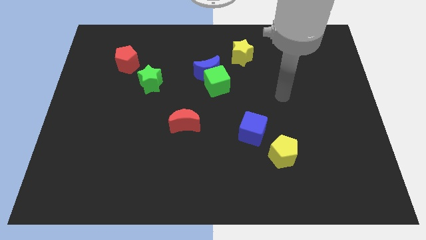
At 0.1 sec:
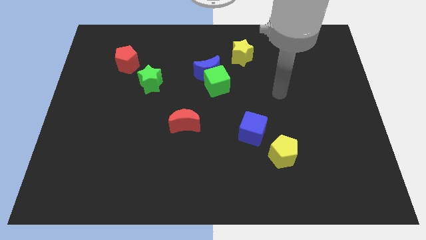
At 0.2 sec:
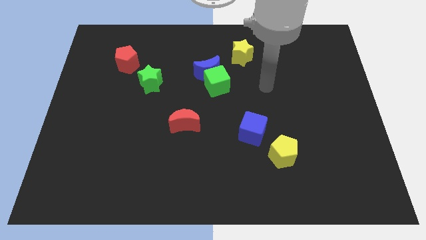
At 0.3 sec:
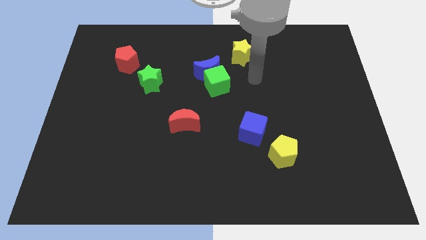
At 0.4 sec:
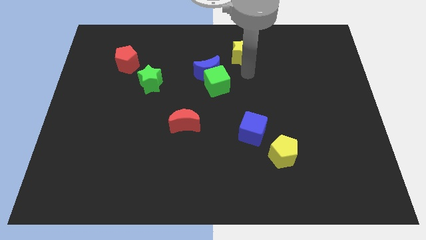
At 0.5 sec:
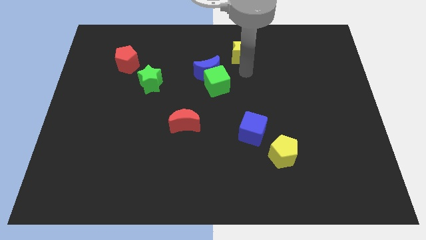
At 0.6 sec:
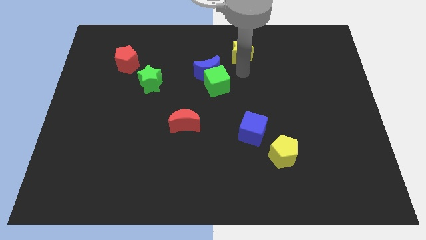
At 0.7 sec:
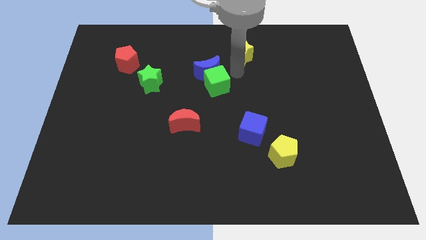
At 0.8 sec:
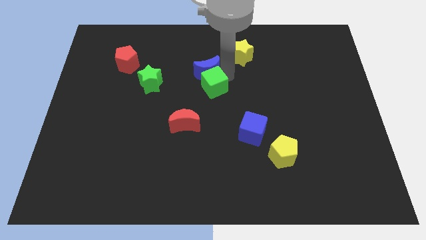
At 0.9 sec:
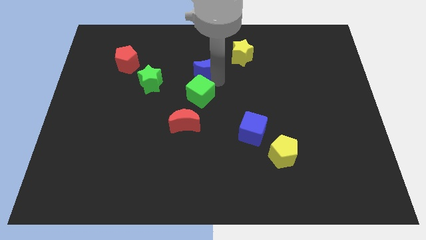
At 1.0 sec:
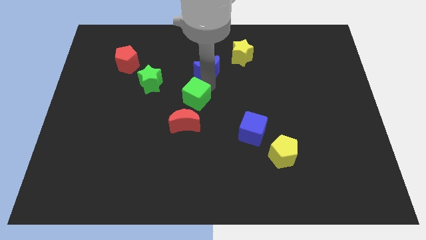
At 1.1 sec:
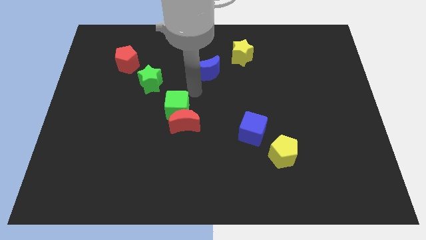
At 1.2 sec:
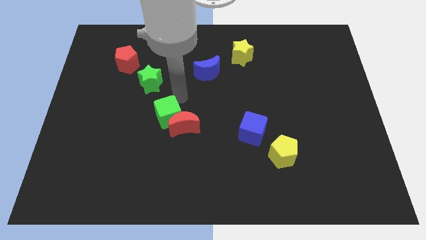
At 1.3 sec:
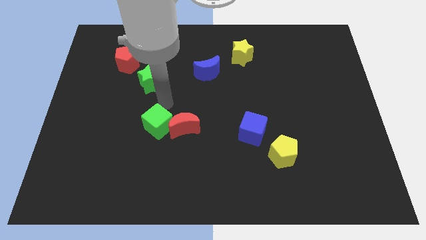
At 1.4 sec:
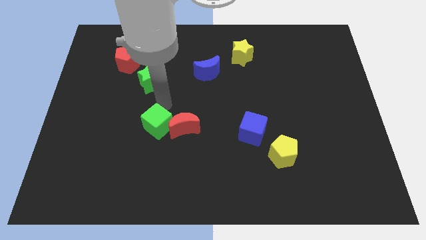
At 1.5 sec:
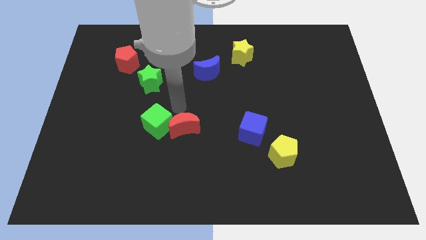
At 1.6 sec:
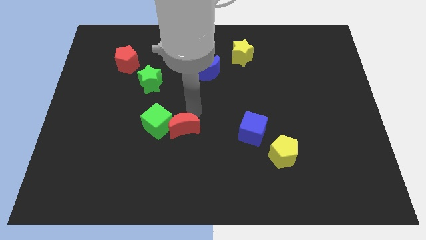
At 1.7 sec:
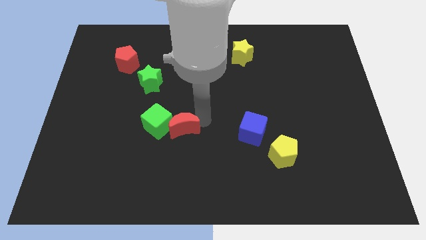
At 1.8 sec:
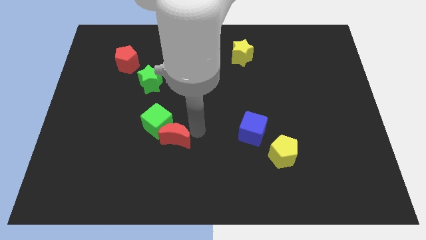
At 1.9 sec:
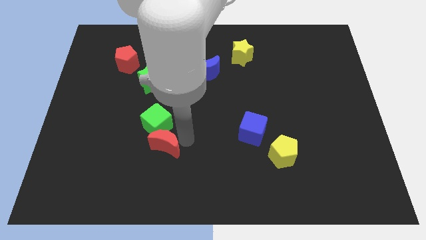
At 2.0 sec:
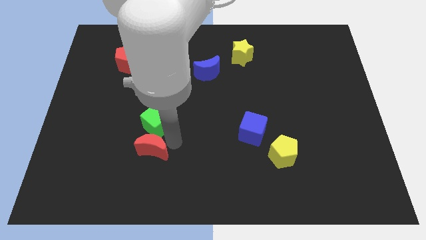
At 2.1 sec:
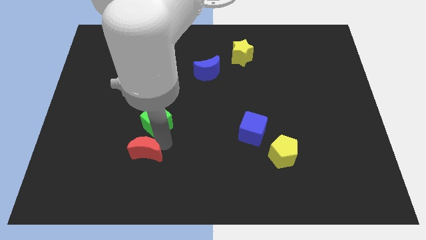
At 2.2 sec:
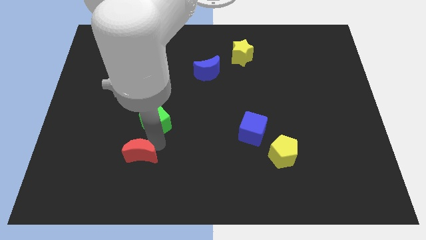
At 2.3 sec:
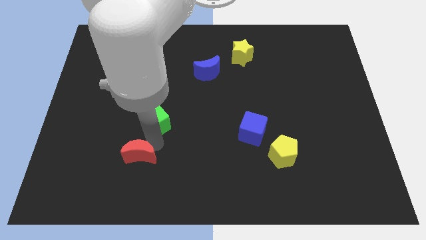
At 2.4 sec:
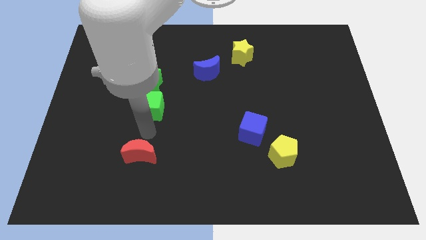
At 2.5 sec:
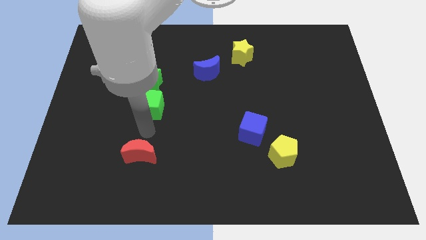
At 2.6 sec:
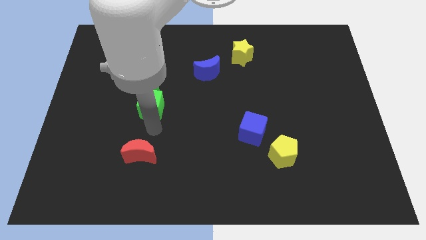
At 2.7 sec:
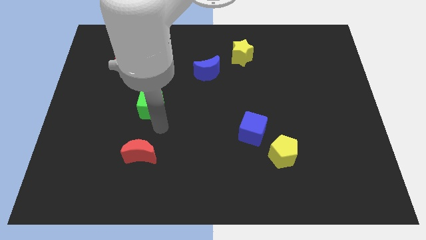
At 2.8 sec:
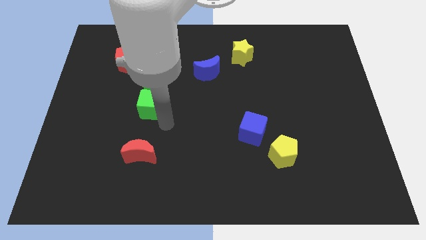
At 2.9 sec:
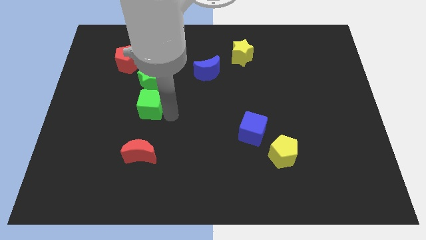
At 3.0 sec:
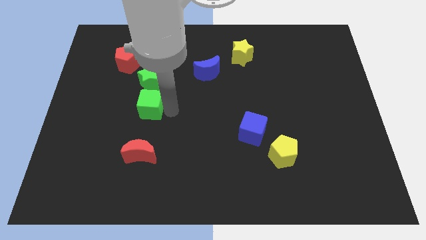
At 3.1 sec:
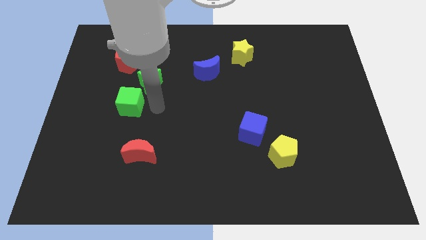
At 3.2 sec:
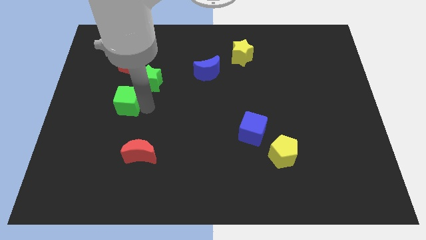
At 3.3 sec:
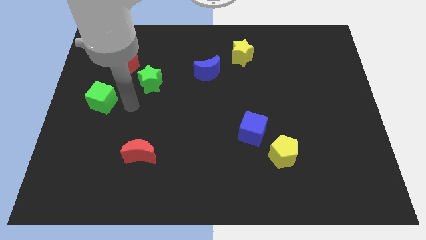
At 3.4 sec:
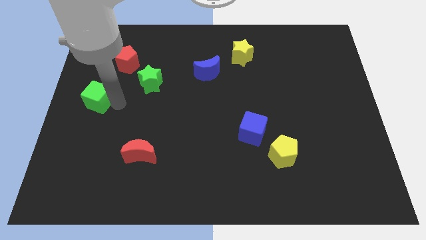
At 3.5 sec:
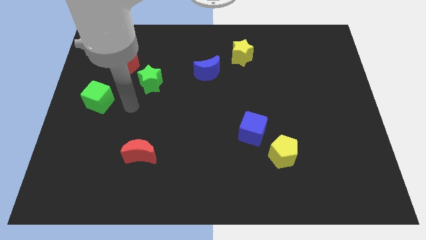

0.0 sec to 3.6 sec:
move the red moon and green cube towards bottom left

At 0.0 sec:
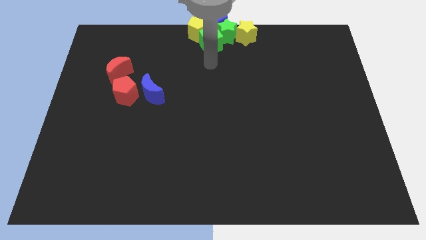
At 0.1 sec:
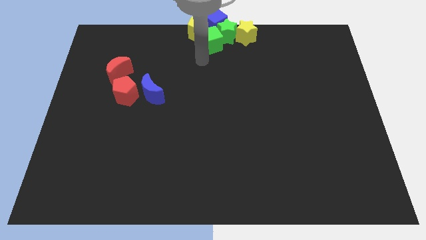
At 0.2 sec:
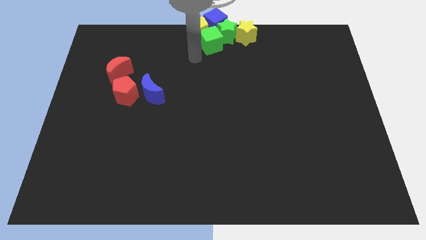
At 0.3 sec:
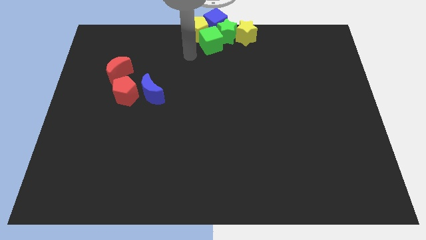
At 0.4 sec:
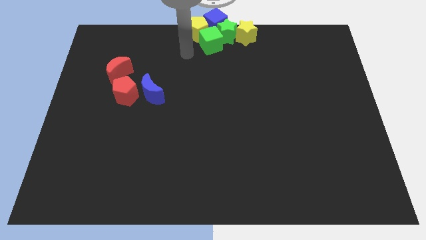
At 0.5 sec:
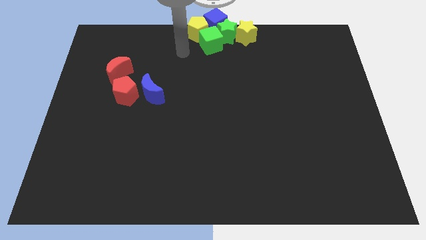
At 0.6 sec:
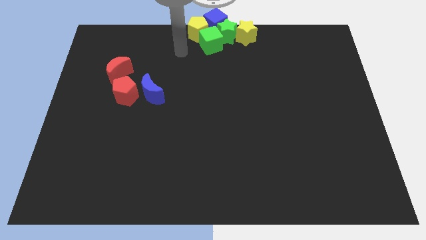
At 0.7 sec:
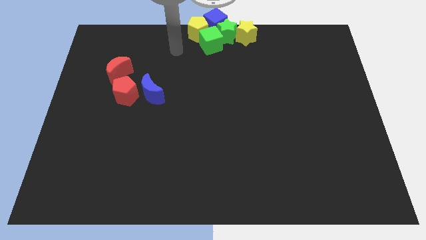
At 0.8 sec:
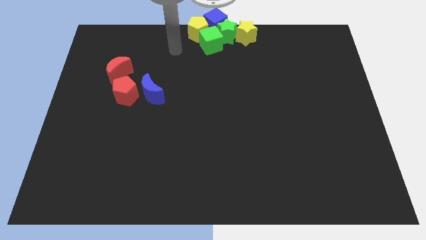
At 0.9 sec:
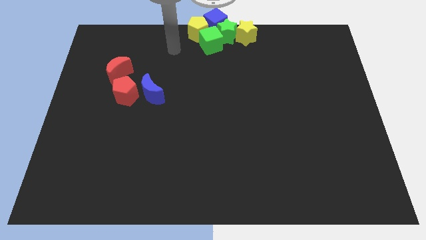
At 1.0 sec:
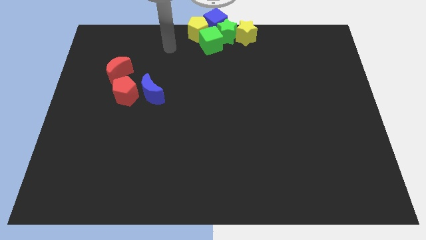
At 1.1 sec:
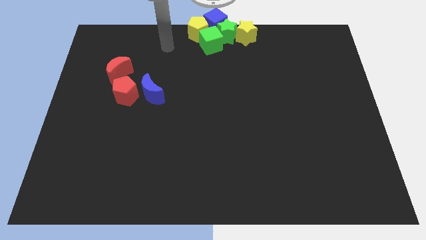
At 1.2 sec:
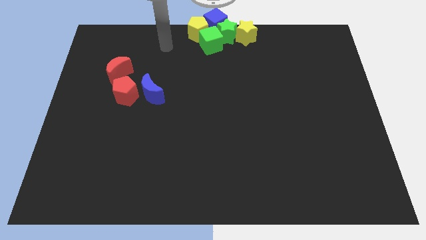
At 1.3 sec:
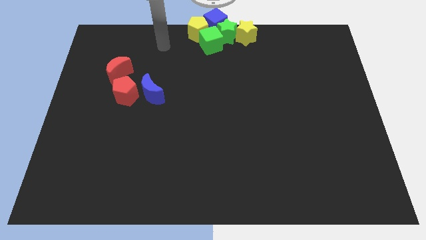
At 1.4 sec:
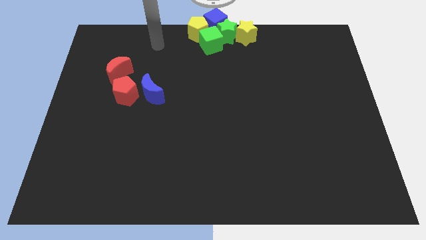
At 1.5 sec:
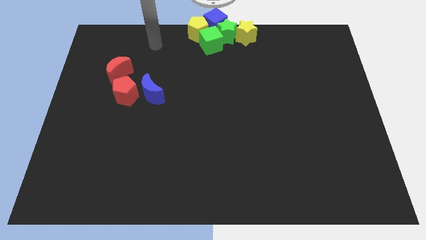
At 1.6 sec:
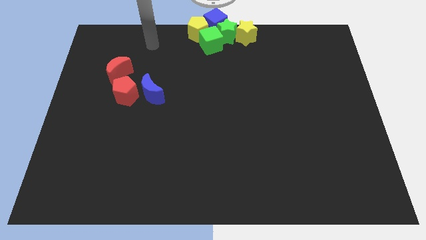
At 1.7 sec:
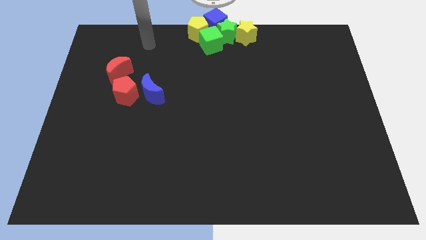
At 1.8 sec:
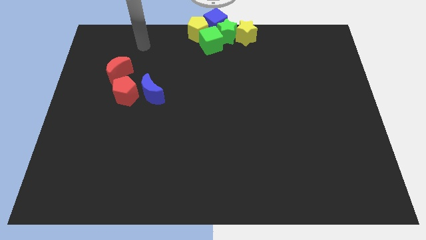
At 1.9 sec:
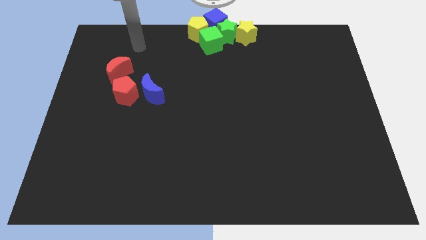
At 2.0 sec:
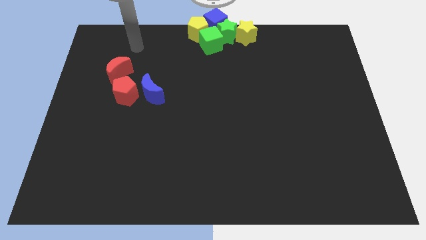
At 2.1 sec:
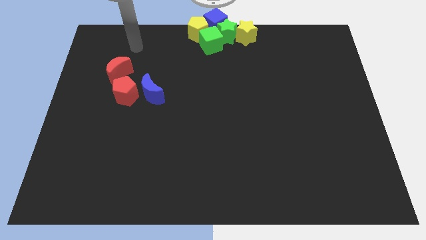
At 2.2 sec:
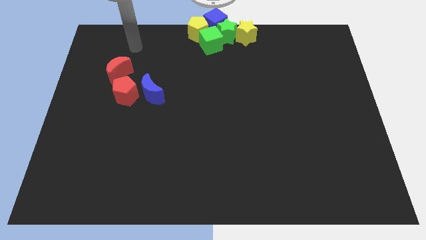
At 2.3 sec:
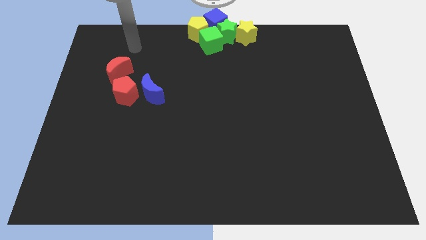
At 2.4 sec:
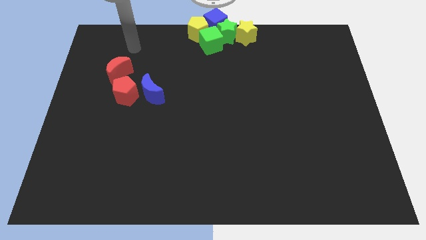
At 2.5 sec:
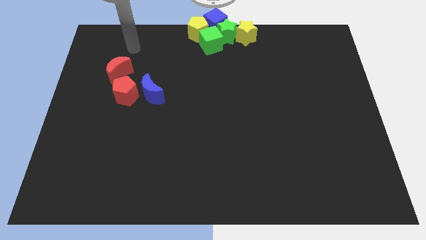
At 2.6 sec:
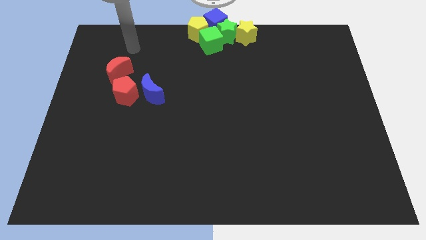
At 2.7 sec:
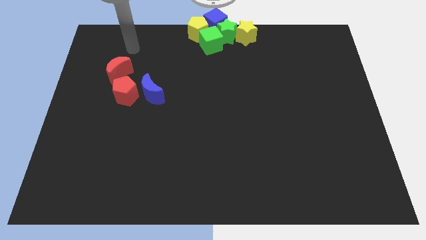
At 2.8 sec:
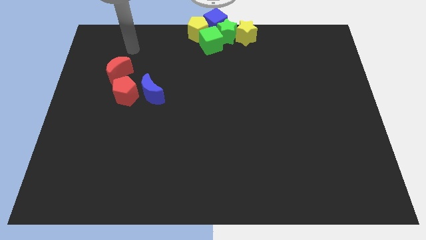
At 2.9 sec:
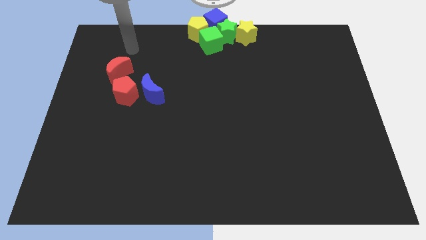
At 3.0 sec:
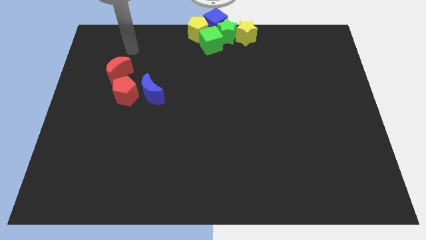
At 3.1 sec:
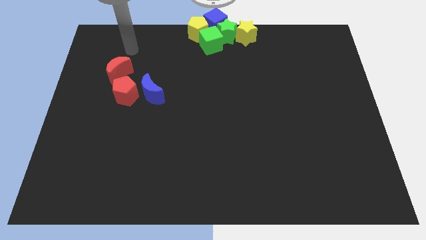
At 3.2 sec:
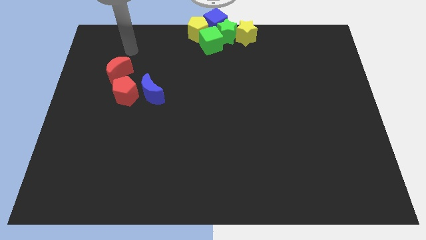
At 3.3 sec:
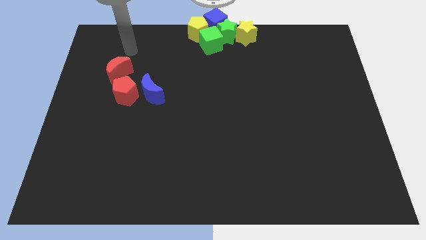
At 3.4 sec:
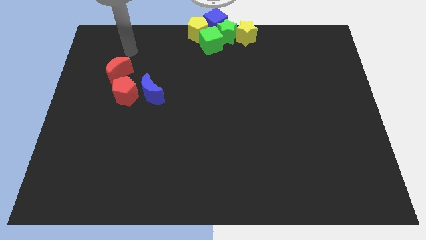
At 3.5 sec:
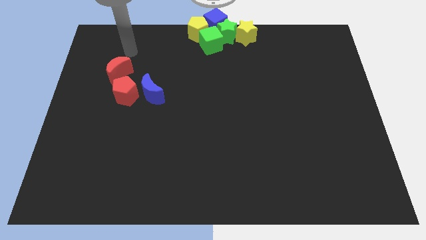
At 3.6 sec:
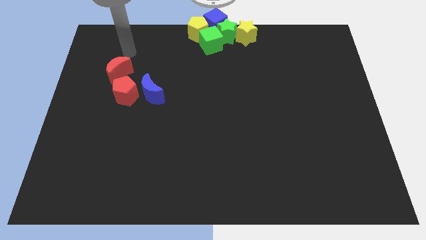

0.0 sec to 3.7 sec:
move arm near red moon

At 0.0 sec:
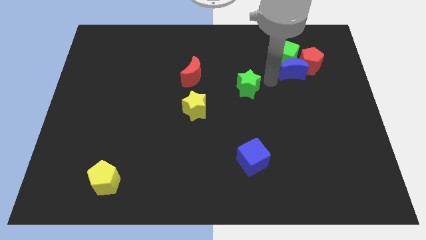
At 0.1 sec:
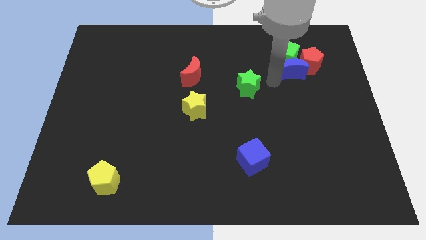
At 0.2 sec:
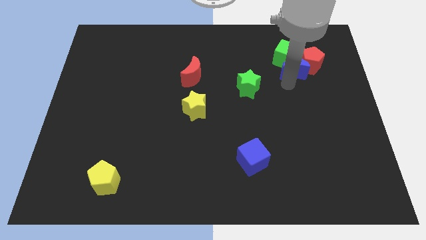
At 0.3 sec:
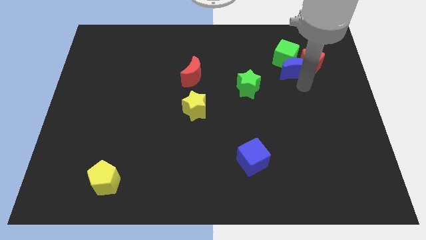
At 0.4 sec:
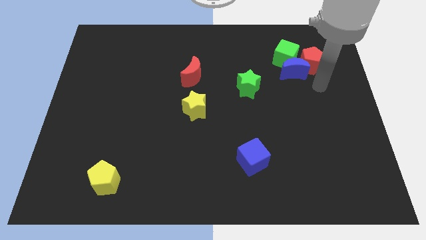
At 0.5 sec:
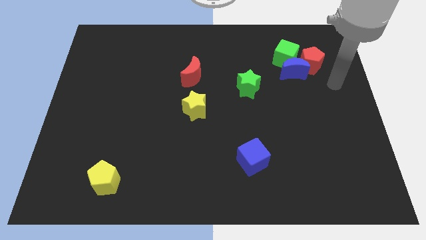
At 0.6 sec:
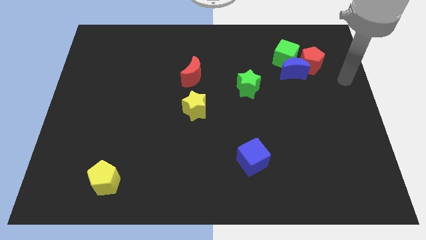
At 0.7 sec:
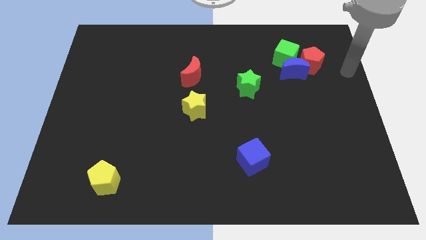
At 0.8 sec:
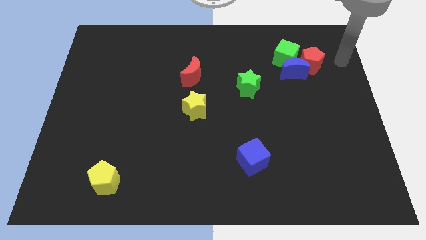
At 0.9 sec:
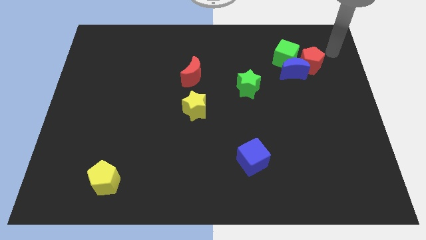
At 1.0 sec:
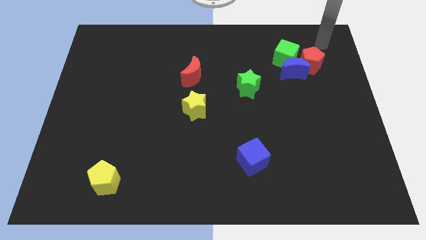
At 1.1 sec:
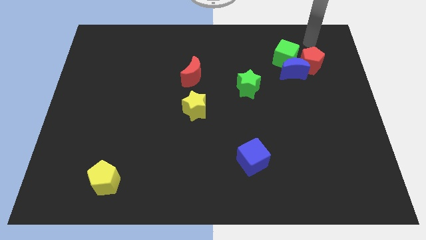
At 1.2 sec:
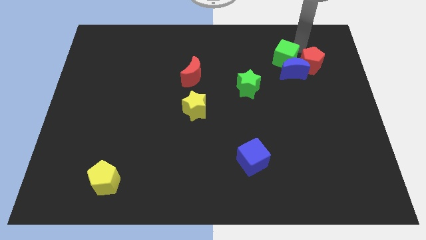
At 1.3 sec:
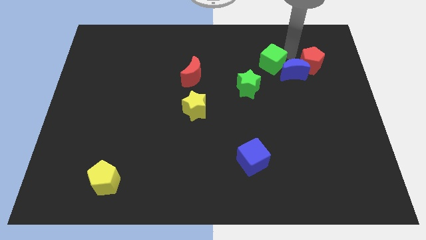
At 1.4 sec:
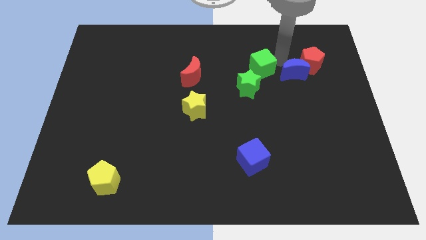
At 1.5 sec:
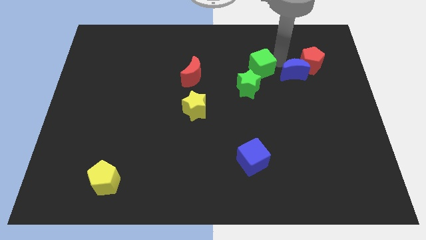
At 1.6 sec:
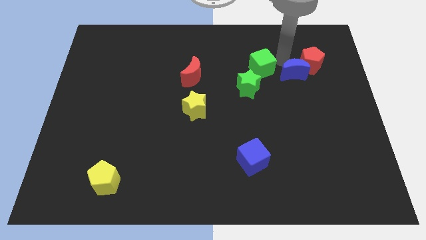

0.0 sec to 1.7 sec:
push the green cube above the green star
